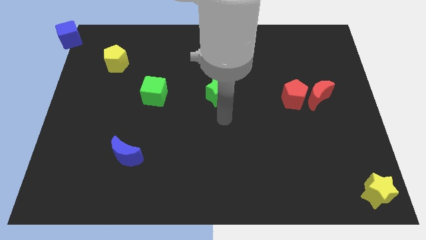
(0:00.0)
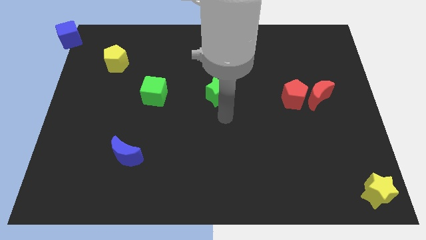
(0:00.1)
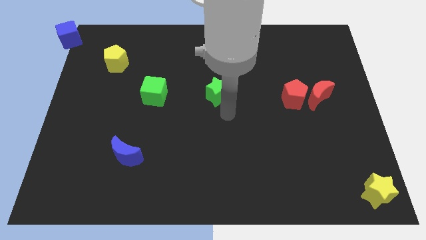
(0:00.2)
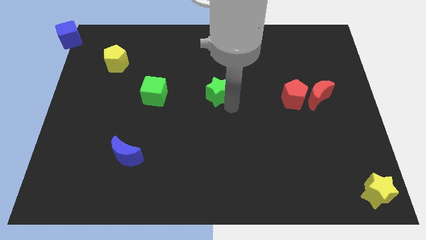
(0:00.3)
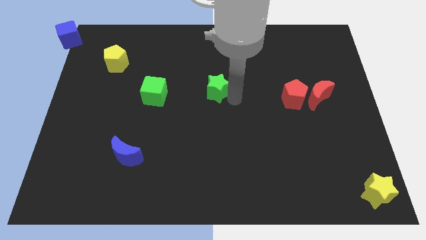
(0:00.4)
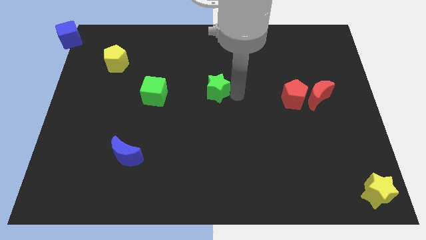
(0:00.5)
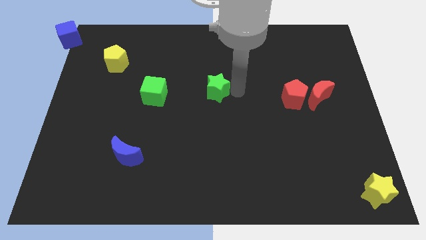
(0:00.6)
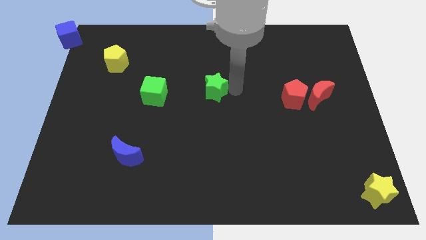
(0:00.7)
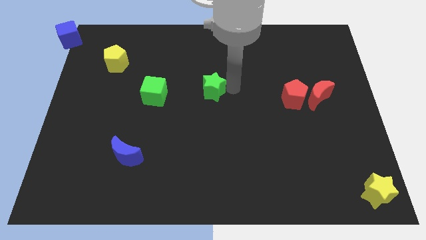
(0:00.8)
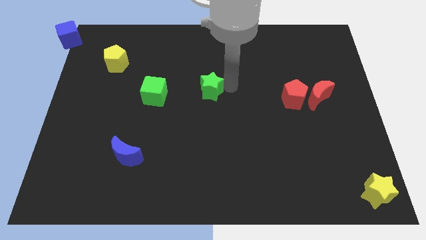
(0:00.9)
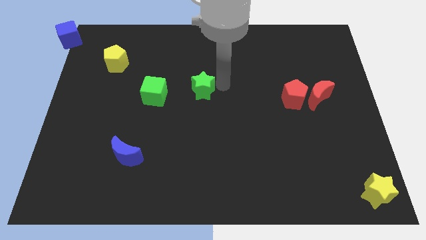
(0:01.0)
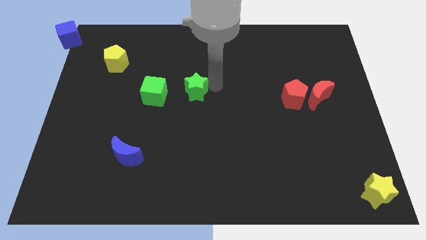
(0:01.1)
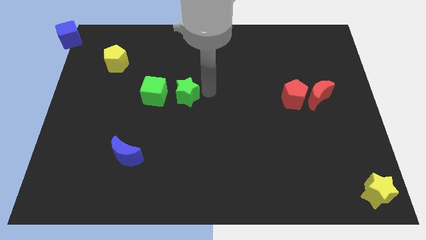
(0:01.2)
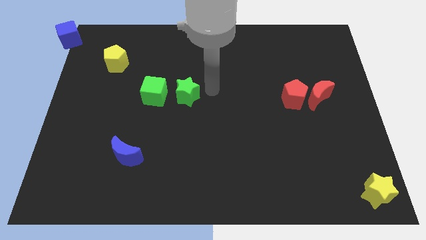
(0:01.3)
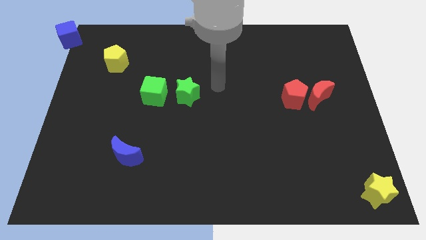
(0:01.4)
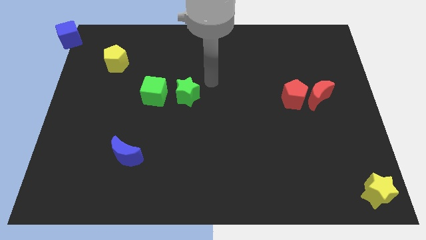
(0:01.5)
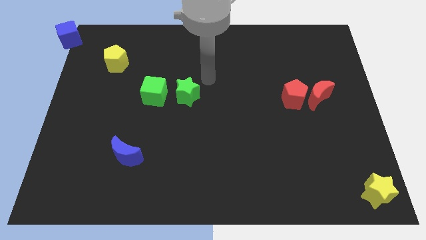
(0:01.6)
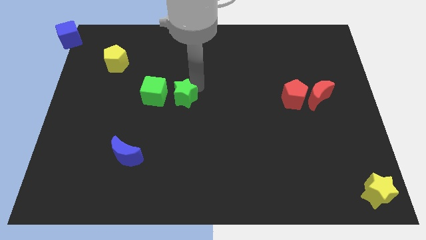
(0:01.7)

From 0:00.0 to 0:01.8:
move the green star to the right of the green cube

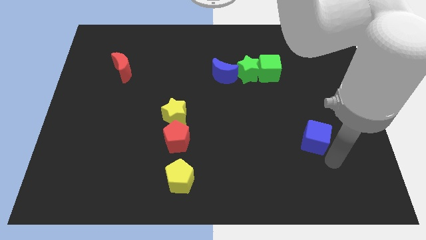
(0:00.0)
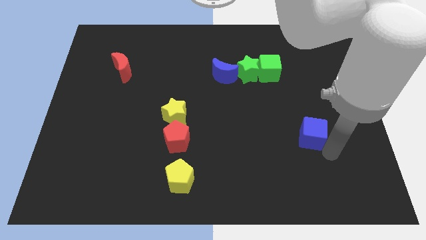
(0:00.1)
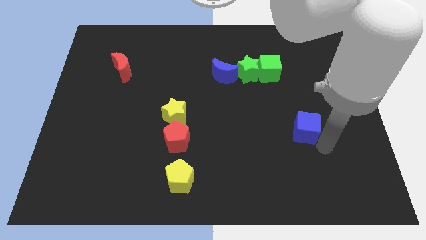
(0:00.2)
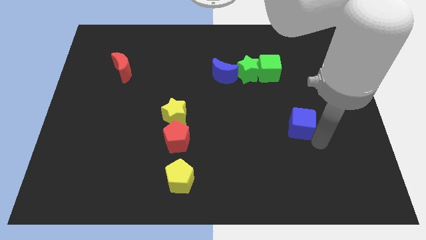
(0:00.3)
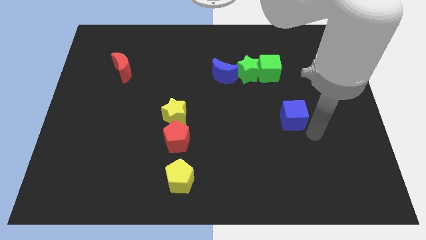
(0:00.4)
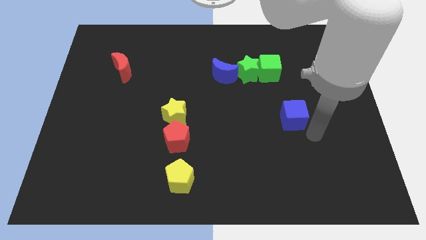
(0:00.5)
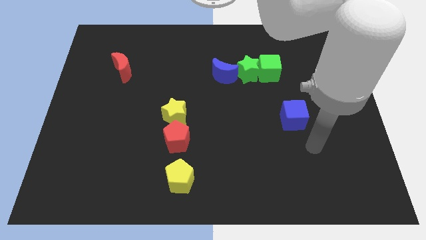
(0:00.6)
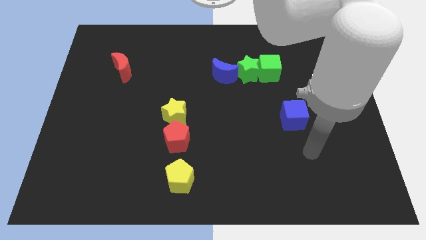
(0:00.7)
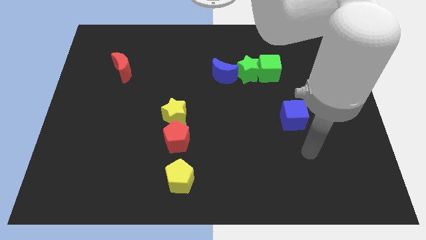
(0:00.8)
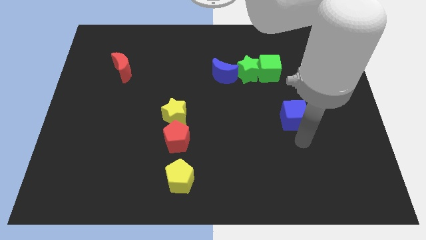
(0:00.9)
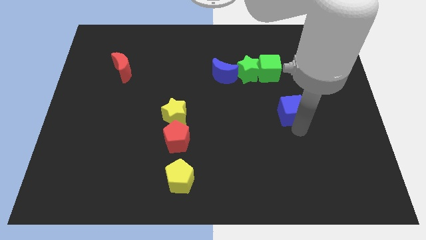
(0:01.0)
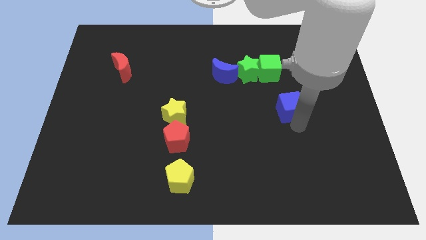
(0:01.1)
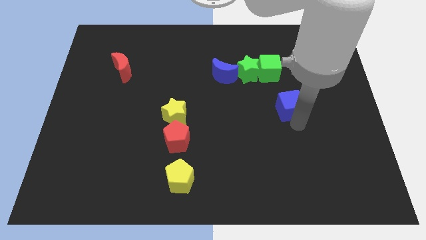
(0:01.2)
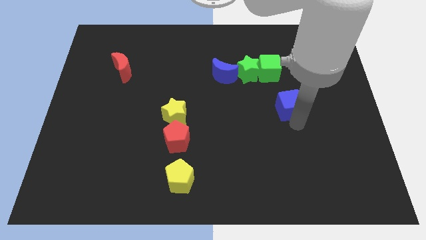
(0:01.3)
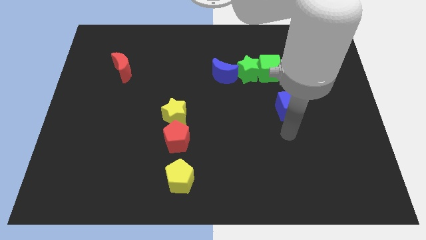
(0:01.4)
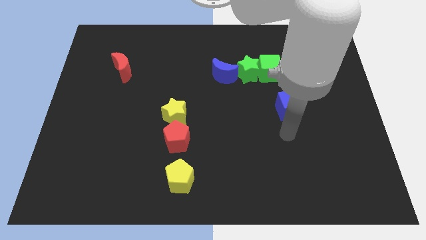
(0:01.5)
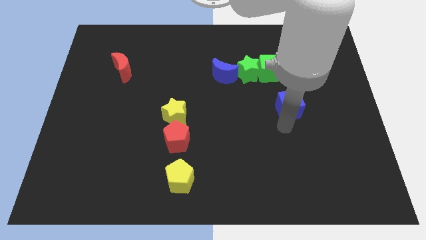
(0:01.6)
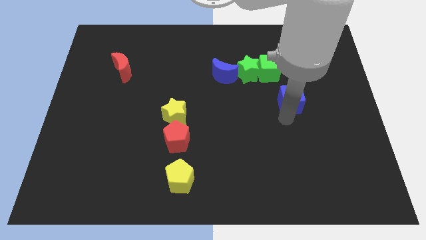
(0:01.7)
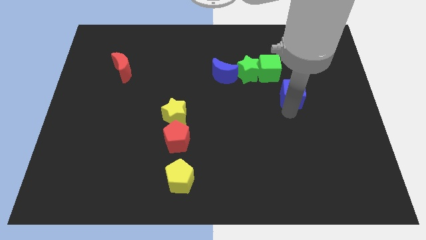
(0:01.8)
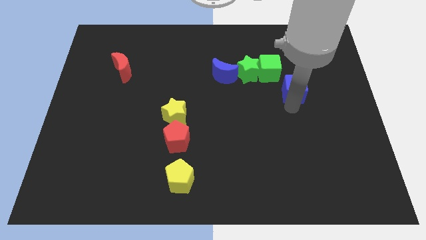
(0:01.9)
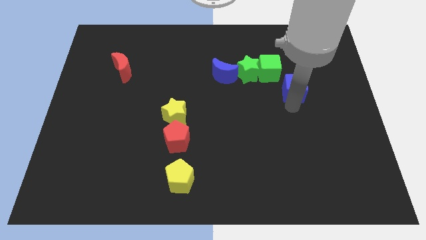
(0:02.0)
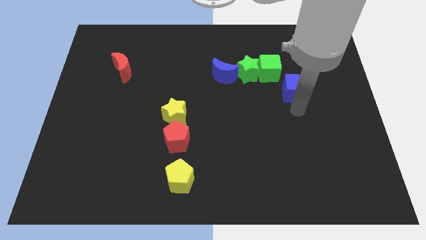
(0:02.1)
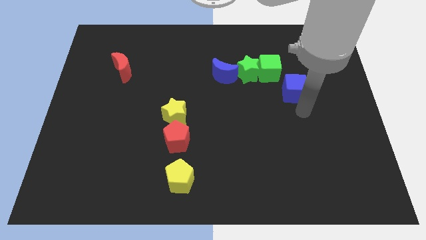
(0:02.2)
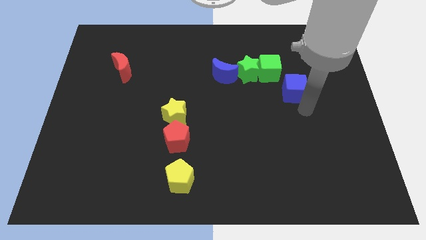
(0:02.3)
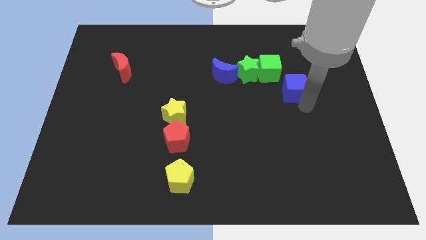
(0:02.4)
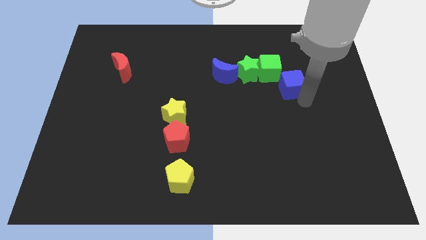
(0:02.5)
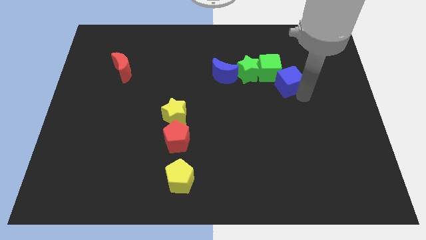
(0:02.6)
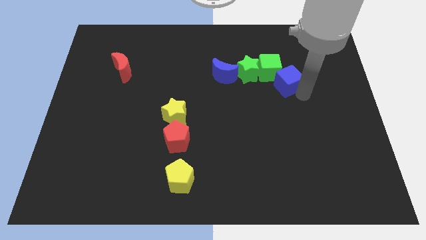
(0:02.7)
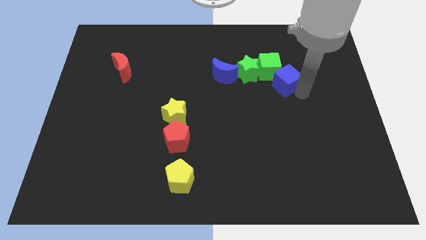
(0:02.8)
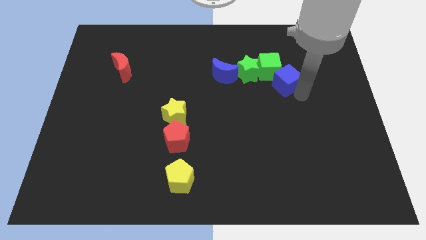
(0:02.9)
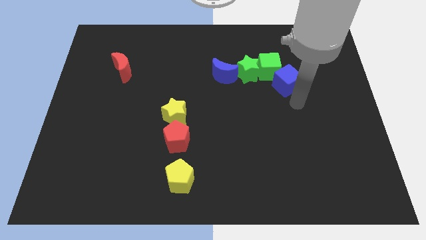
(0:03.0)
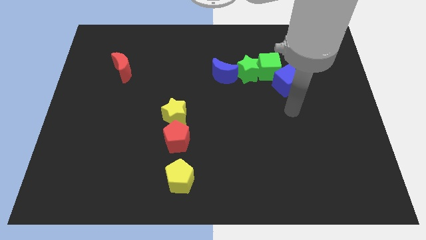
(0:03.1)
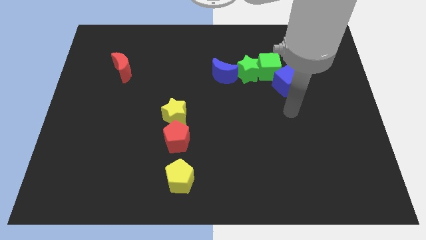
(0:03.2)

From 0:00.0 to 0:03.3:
push blue cube in to green cube

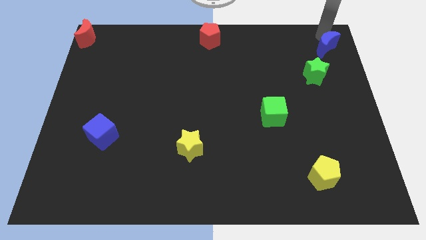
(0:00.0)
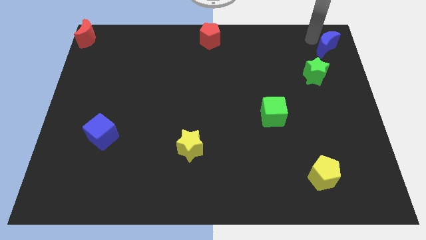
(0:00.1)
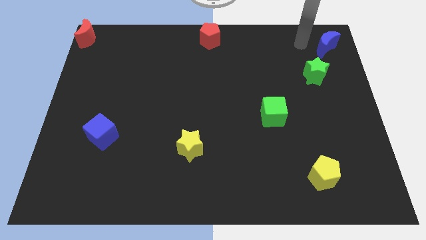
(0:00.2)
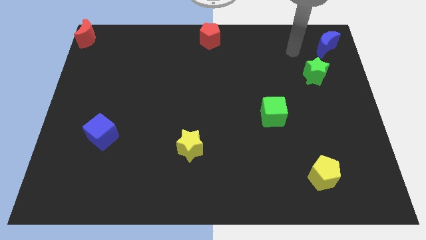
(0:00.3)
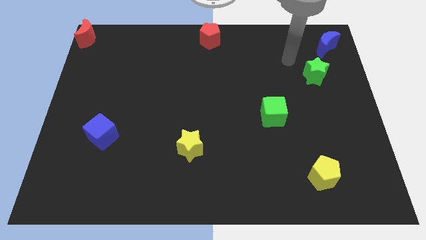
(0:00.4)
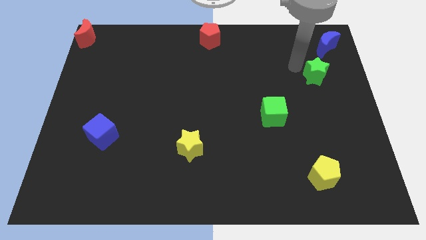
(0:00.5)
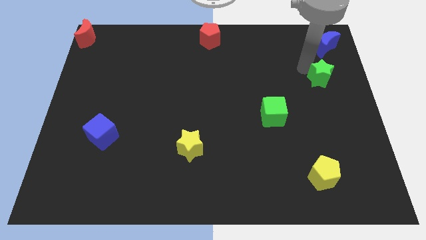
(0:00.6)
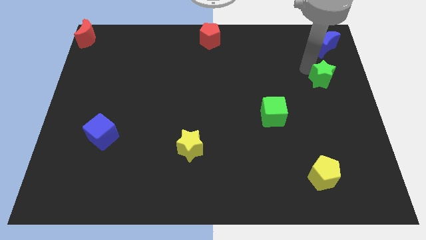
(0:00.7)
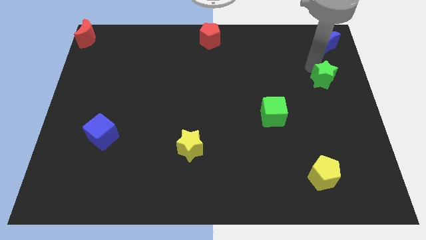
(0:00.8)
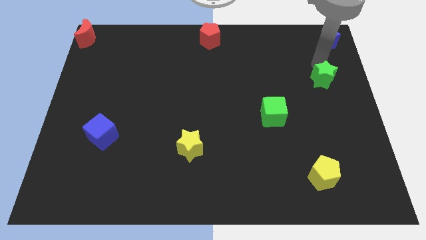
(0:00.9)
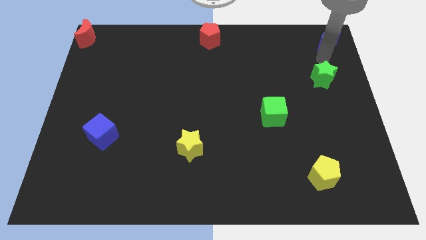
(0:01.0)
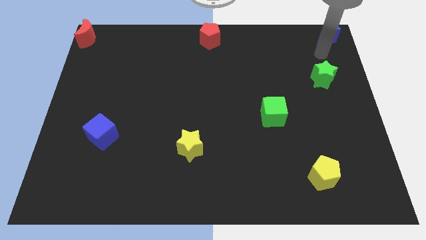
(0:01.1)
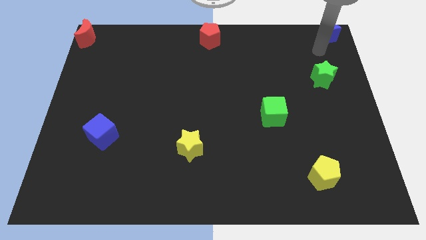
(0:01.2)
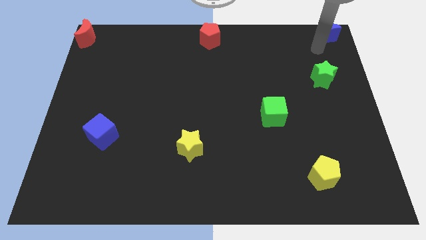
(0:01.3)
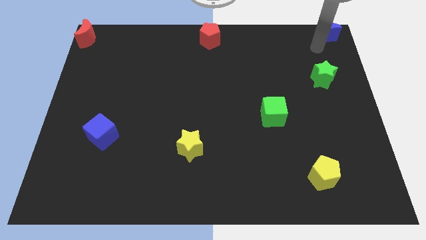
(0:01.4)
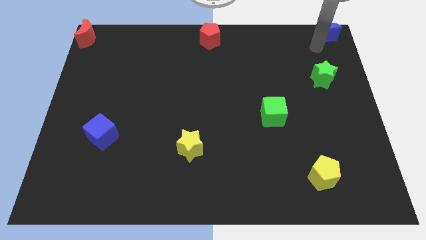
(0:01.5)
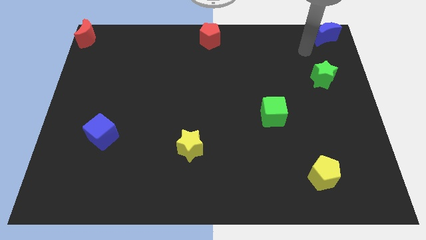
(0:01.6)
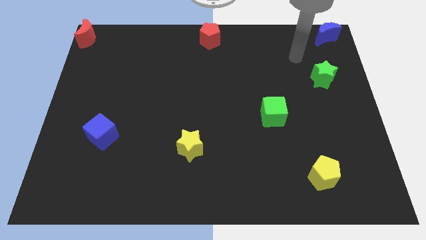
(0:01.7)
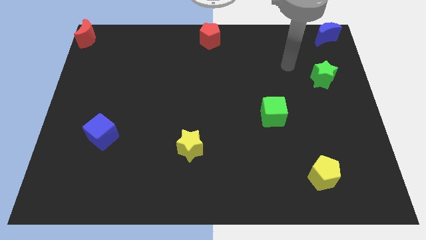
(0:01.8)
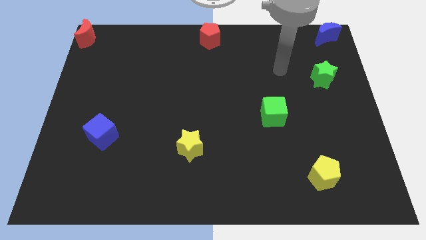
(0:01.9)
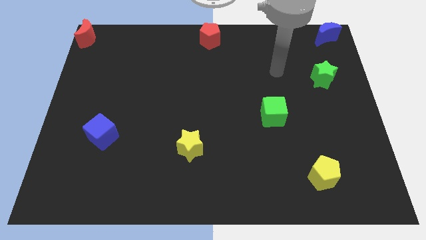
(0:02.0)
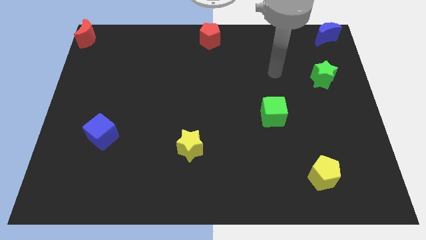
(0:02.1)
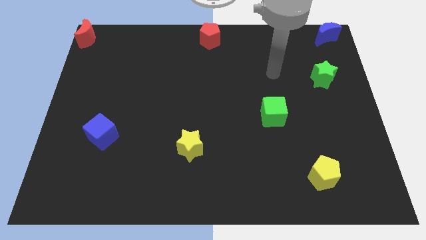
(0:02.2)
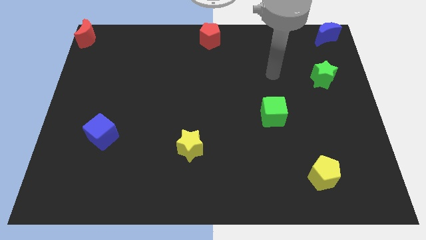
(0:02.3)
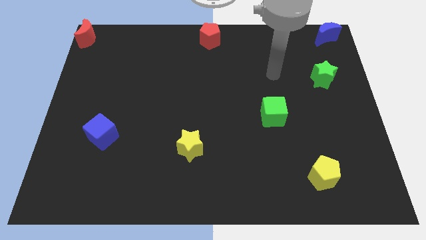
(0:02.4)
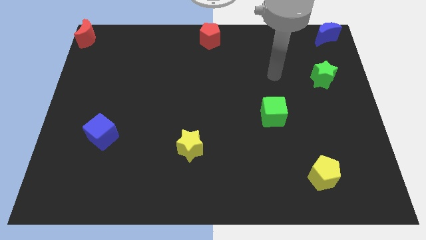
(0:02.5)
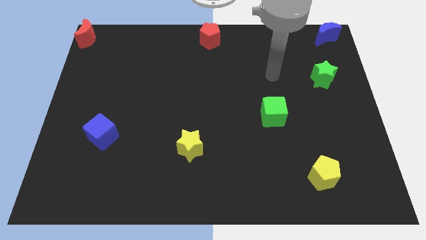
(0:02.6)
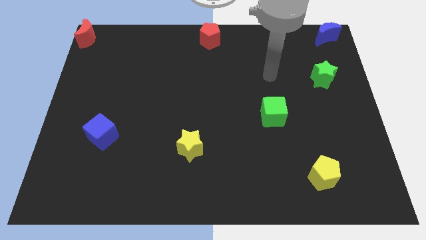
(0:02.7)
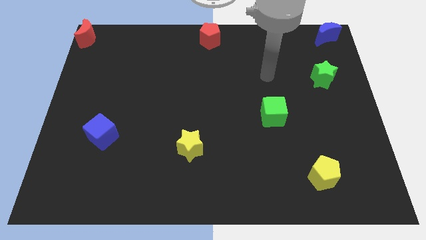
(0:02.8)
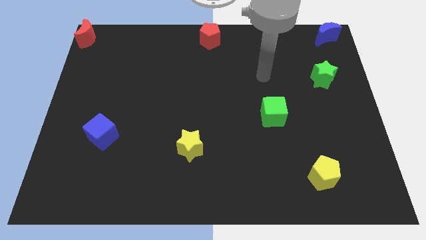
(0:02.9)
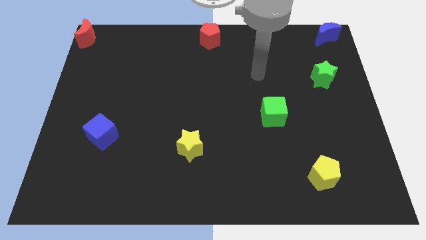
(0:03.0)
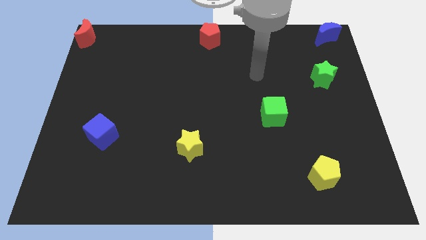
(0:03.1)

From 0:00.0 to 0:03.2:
separate blue moon and green star

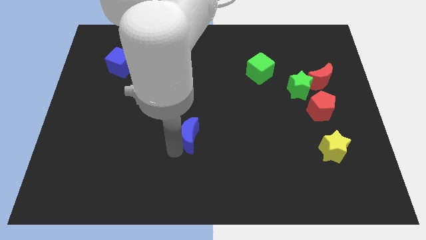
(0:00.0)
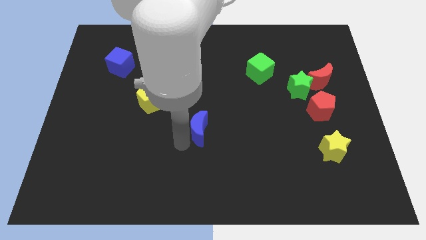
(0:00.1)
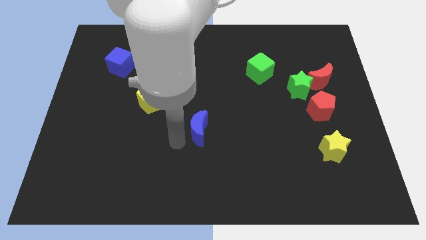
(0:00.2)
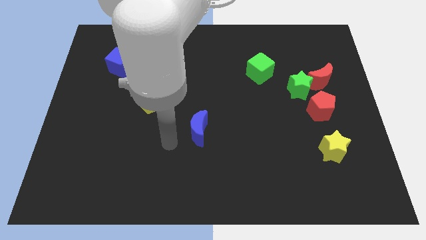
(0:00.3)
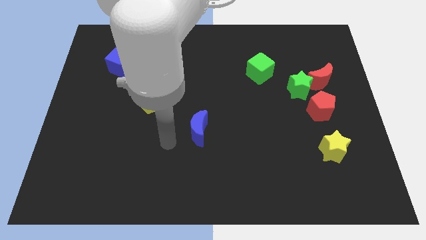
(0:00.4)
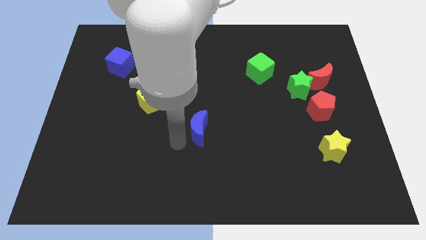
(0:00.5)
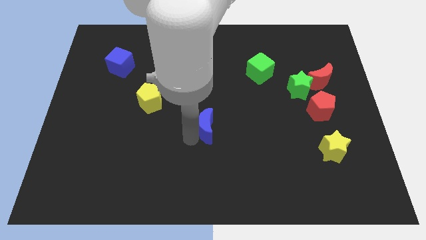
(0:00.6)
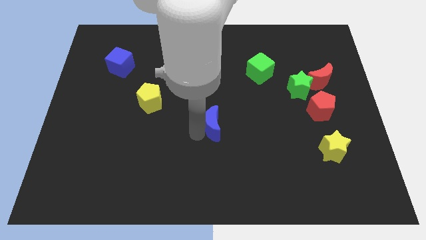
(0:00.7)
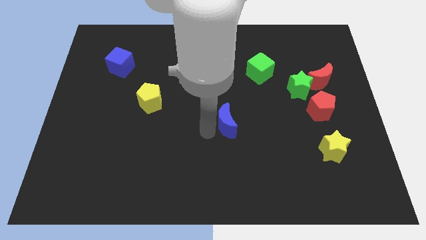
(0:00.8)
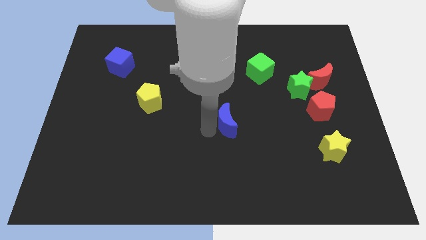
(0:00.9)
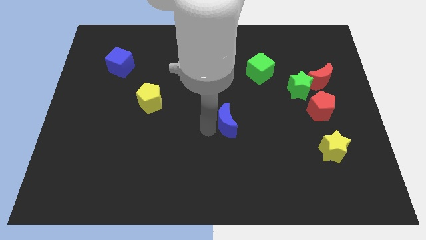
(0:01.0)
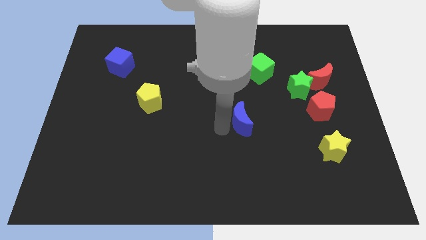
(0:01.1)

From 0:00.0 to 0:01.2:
push the blue moon to the center of the board
